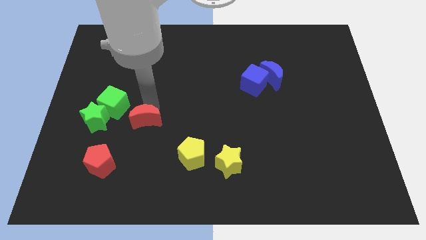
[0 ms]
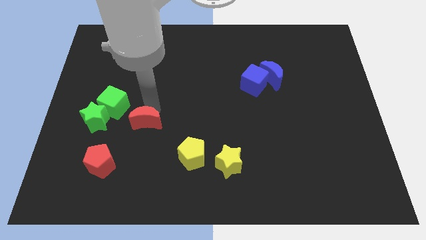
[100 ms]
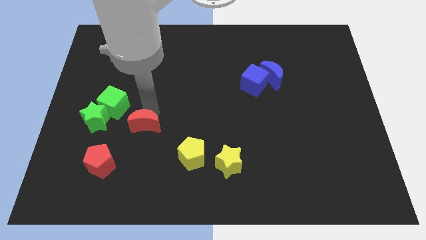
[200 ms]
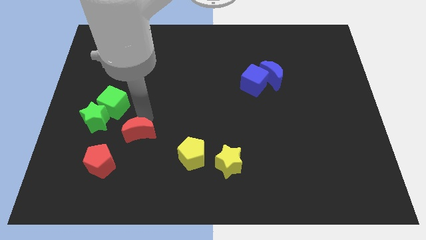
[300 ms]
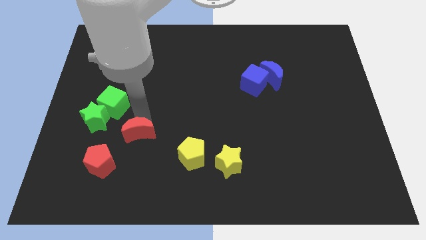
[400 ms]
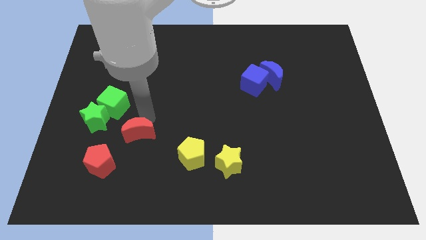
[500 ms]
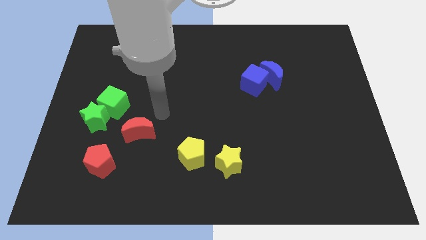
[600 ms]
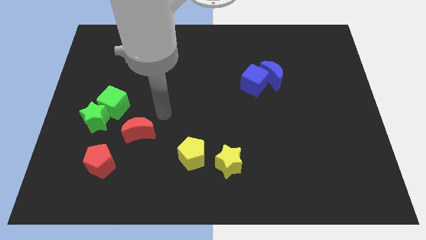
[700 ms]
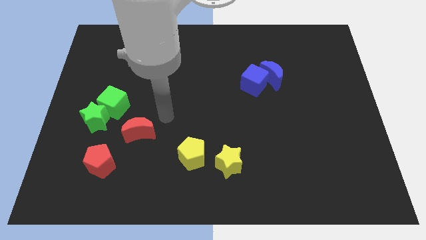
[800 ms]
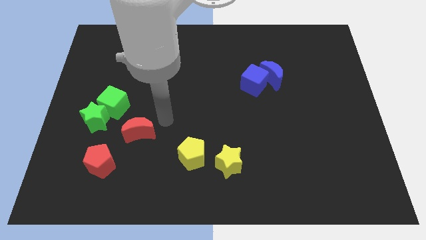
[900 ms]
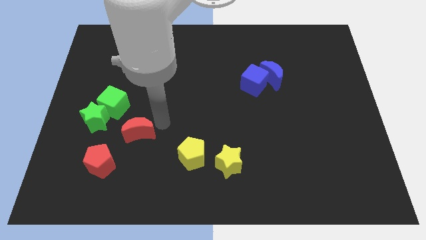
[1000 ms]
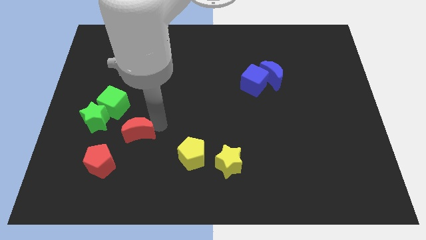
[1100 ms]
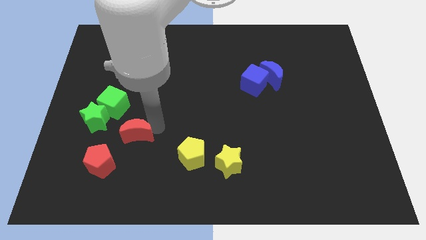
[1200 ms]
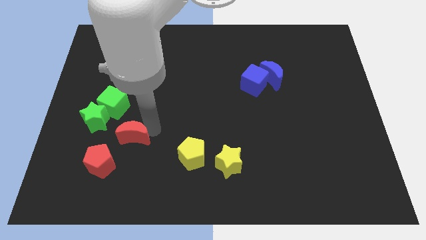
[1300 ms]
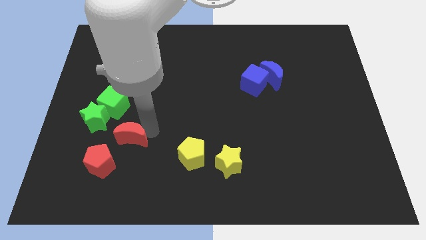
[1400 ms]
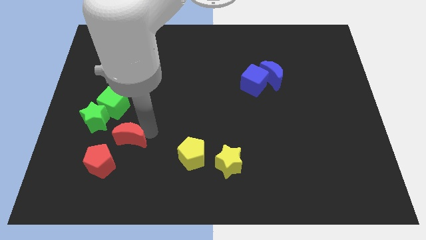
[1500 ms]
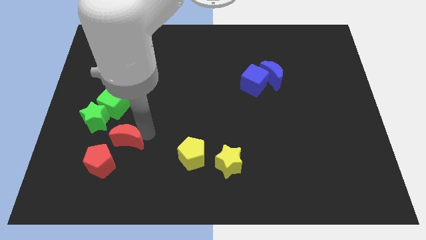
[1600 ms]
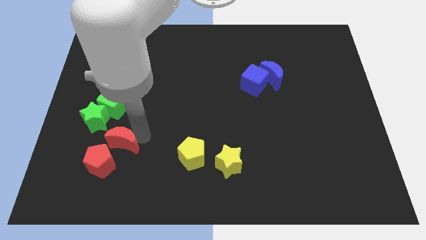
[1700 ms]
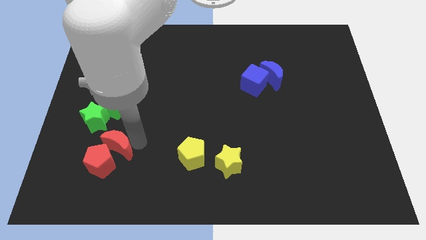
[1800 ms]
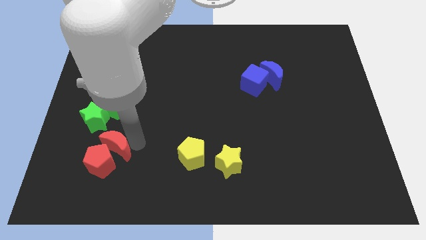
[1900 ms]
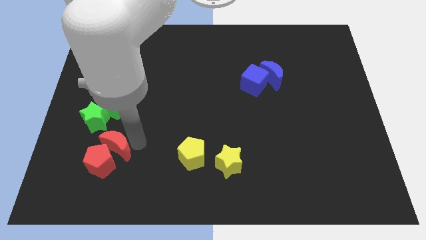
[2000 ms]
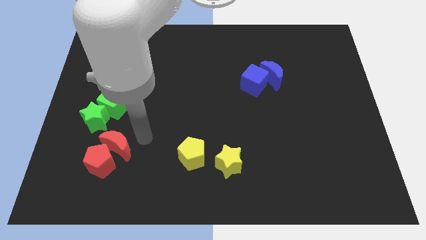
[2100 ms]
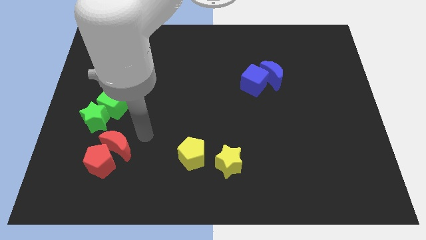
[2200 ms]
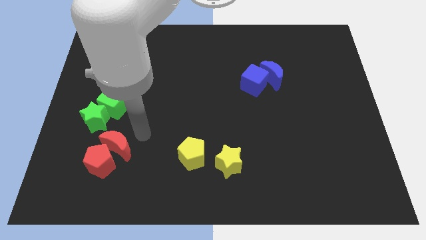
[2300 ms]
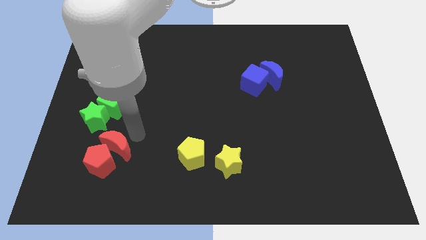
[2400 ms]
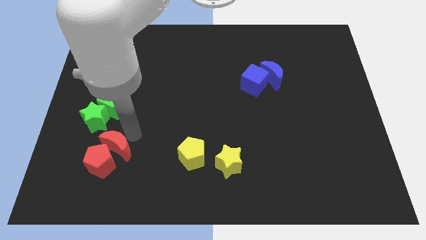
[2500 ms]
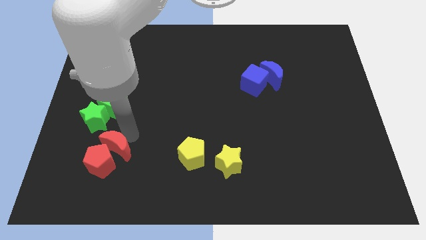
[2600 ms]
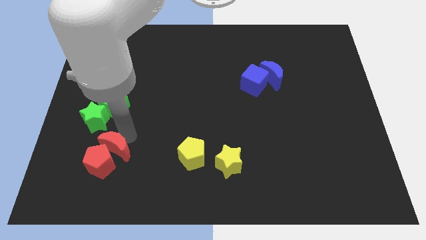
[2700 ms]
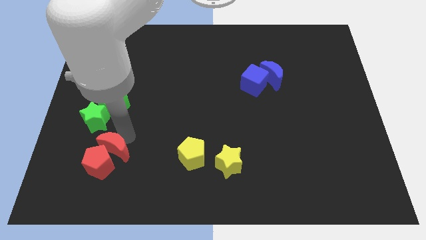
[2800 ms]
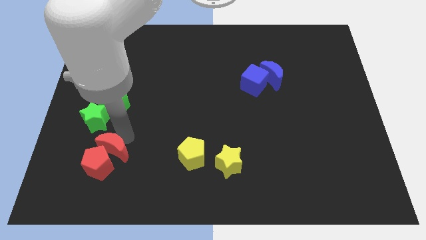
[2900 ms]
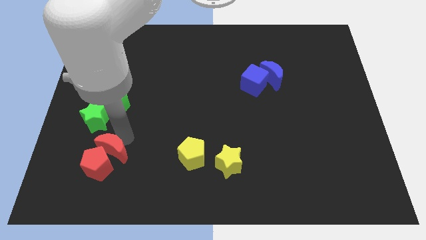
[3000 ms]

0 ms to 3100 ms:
place the red moon on top of the red pentagon

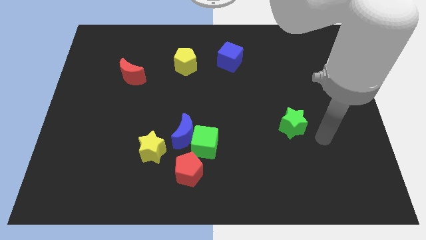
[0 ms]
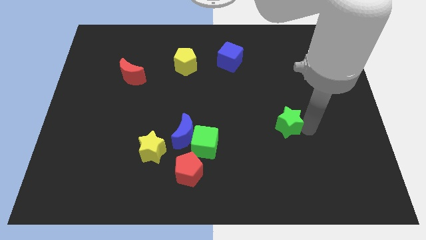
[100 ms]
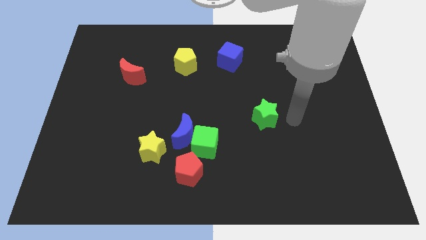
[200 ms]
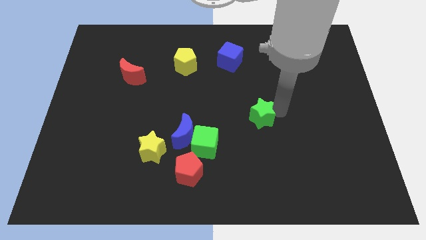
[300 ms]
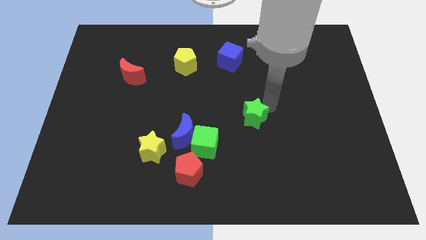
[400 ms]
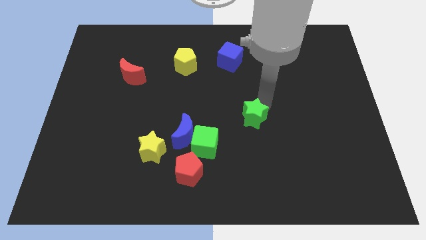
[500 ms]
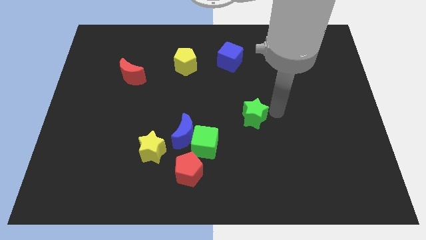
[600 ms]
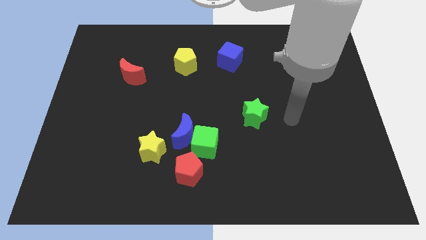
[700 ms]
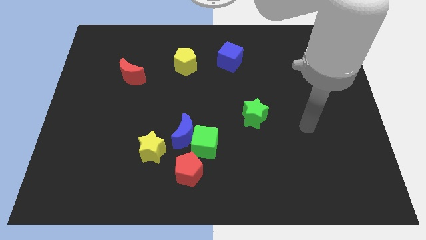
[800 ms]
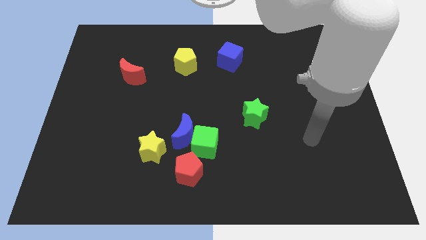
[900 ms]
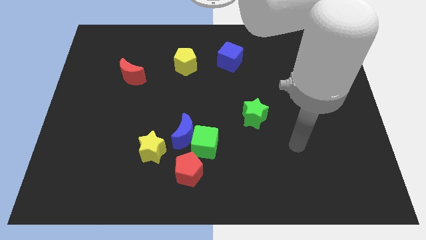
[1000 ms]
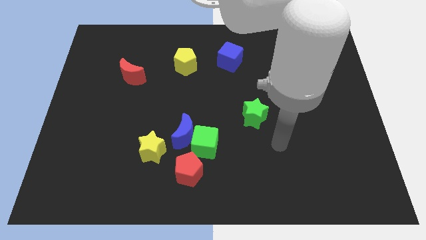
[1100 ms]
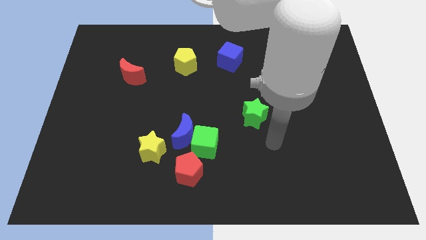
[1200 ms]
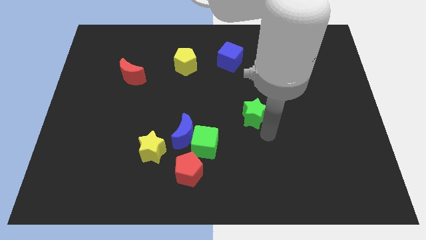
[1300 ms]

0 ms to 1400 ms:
put the green star diagonally on the top right side of the green cube

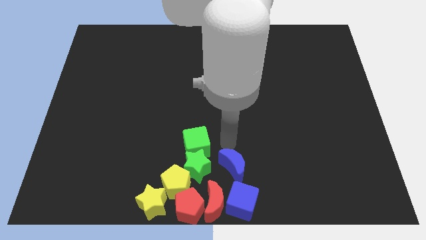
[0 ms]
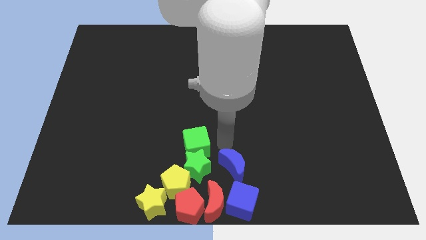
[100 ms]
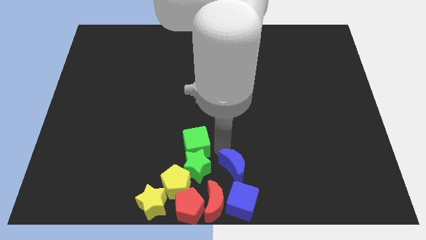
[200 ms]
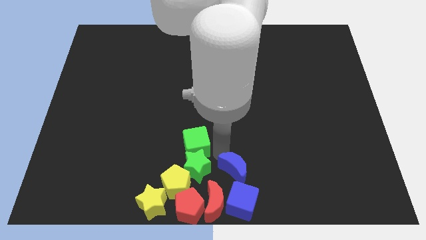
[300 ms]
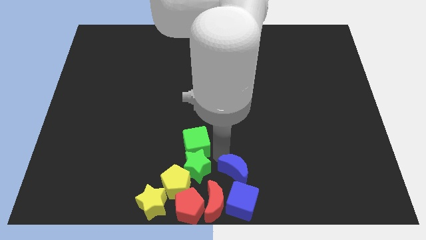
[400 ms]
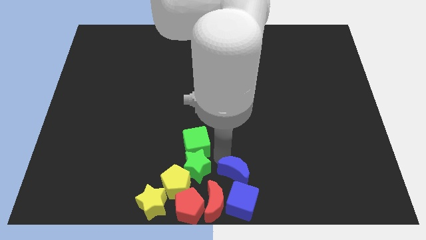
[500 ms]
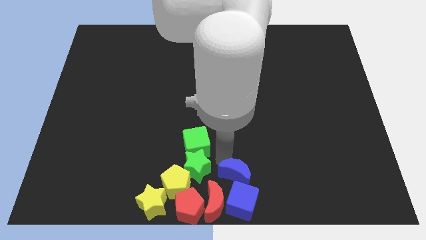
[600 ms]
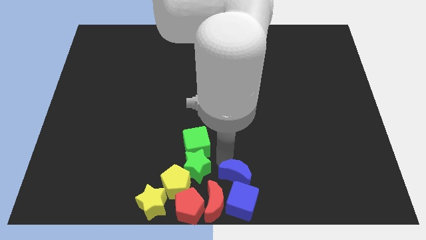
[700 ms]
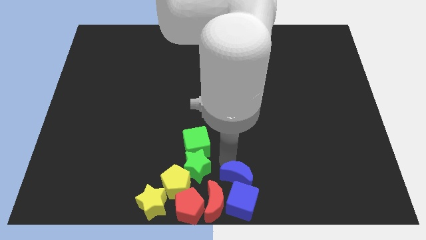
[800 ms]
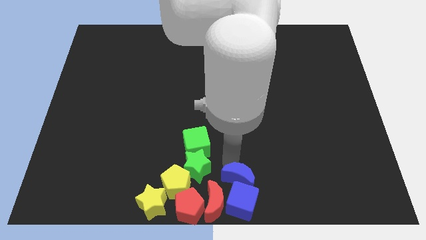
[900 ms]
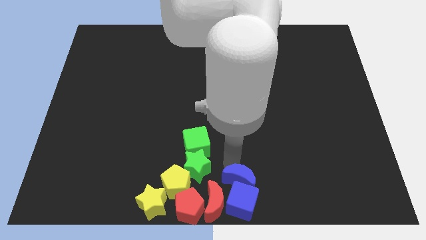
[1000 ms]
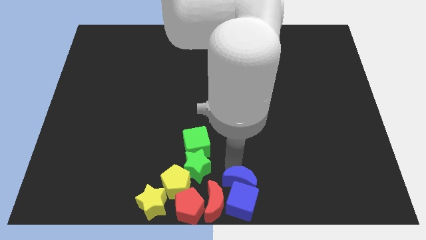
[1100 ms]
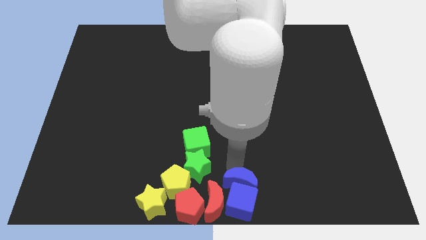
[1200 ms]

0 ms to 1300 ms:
group up the blue blocks adjacent to the group of red blocks

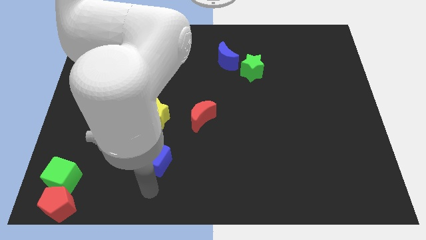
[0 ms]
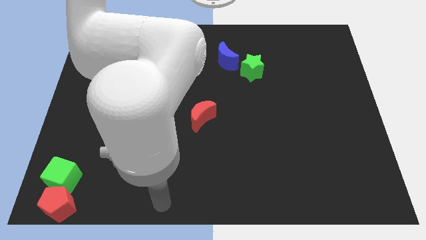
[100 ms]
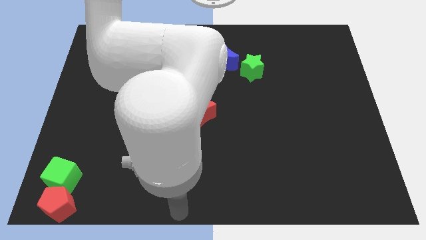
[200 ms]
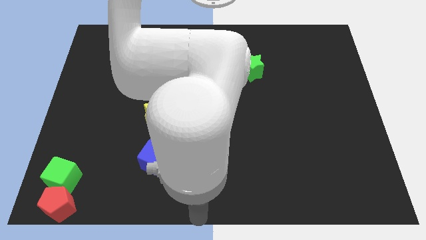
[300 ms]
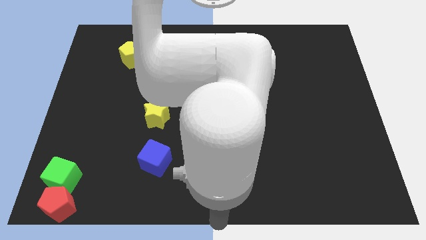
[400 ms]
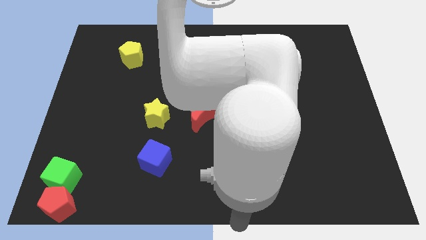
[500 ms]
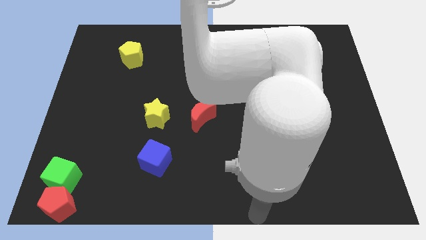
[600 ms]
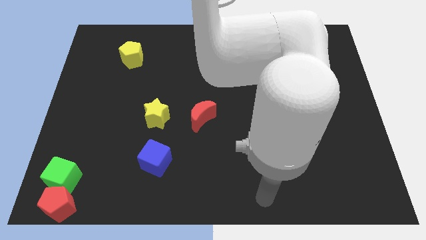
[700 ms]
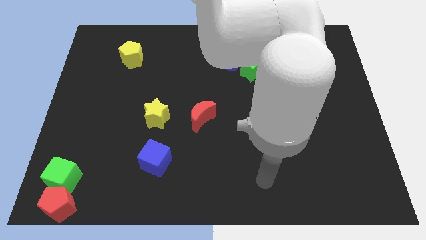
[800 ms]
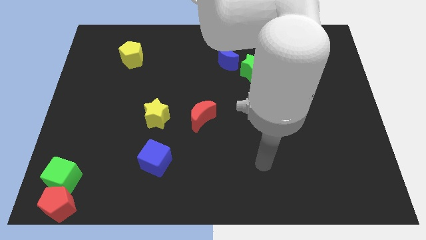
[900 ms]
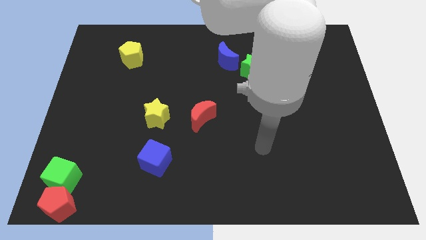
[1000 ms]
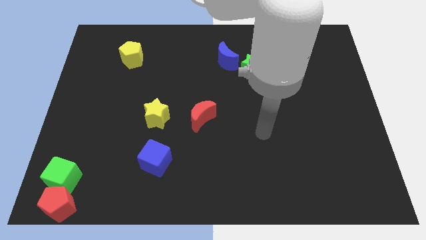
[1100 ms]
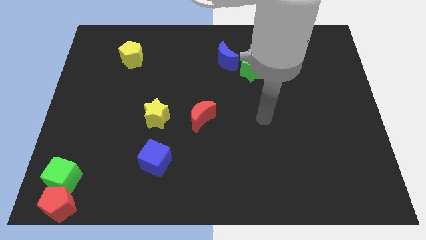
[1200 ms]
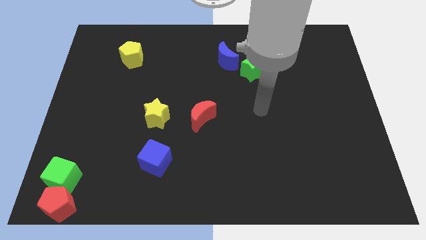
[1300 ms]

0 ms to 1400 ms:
move your arm away from the blue cube

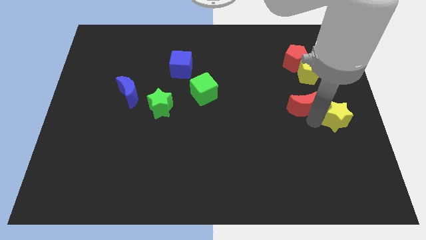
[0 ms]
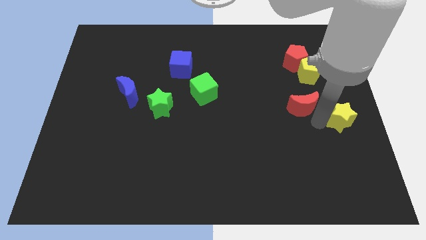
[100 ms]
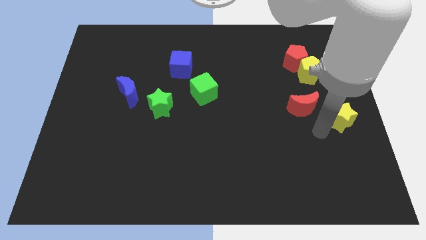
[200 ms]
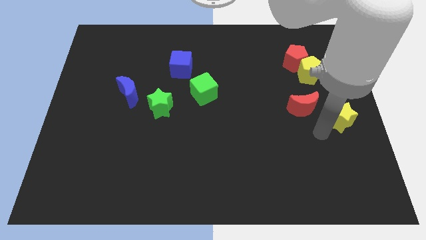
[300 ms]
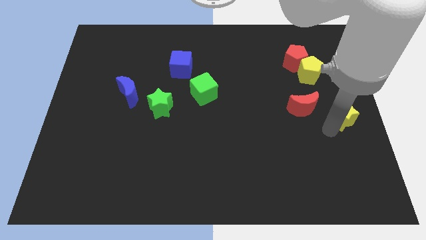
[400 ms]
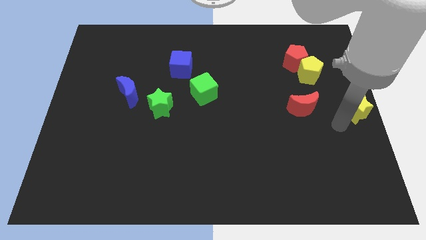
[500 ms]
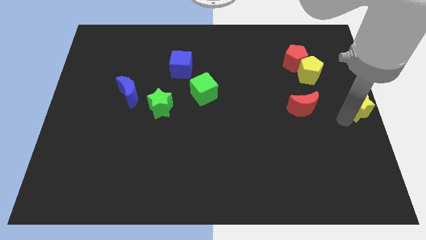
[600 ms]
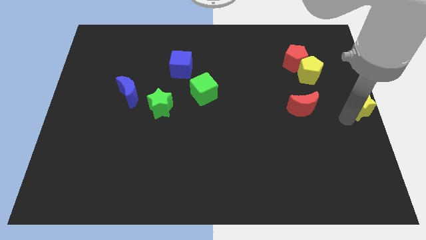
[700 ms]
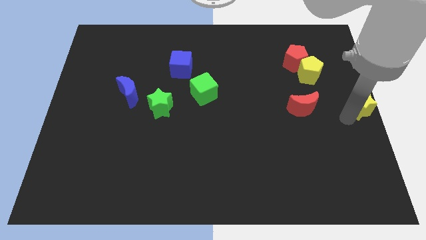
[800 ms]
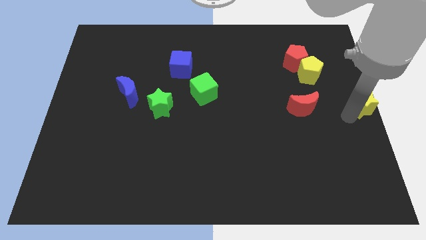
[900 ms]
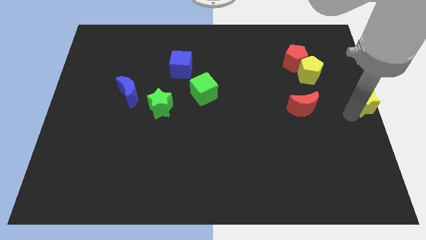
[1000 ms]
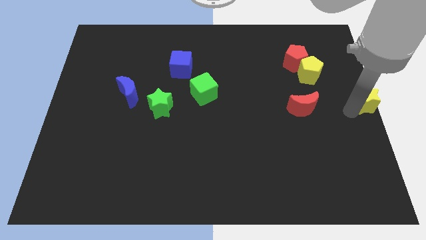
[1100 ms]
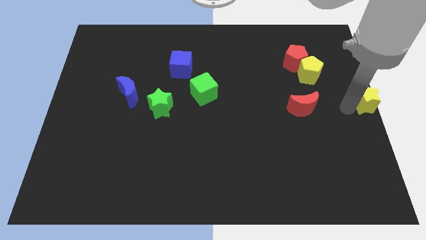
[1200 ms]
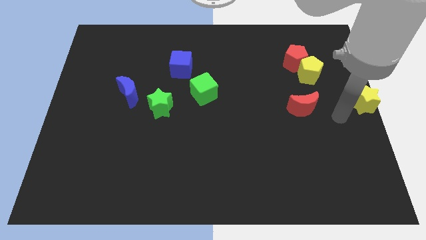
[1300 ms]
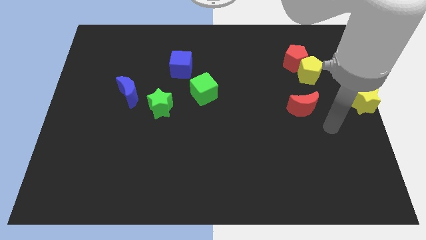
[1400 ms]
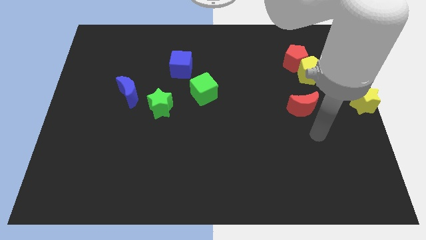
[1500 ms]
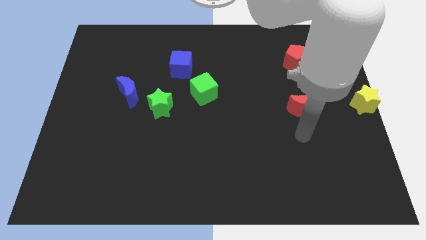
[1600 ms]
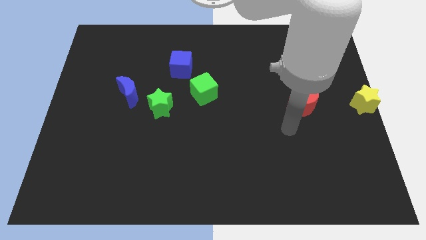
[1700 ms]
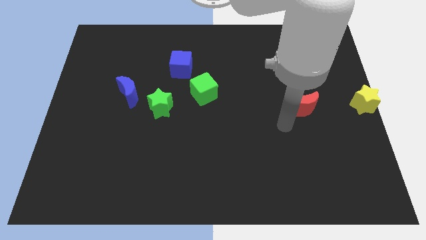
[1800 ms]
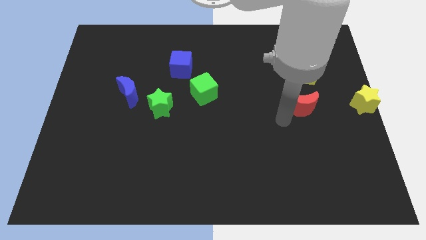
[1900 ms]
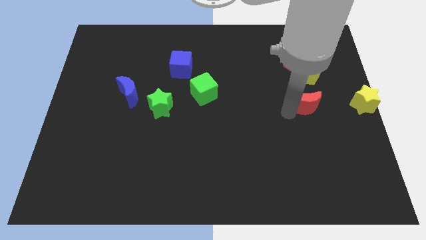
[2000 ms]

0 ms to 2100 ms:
move the yellow star to the right center of the board
